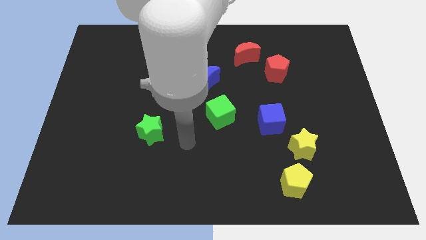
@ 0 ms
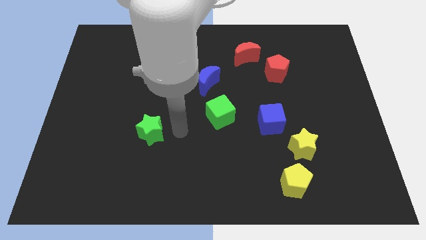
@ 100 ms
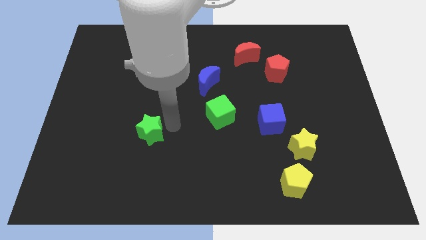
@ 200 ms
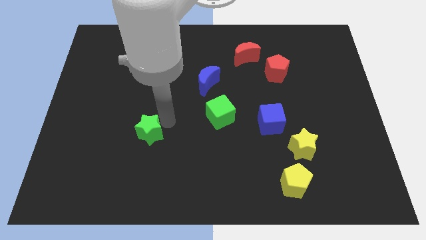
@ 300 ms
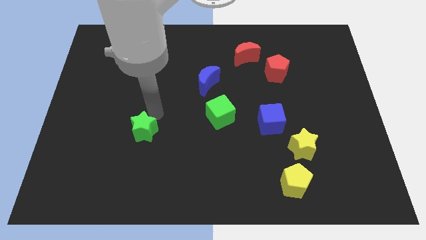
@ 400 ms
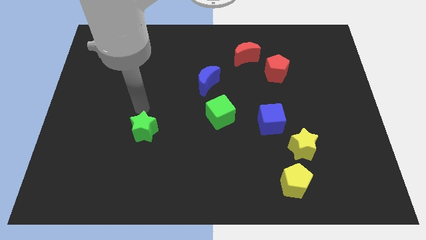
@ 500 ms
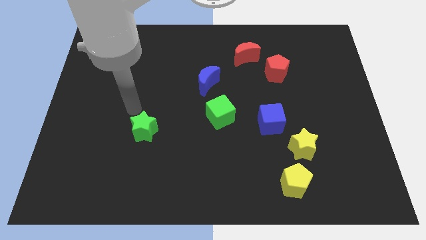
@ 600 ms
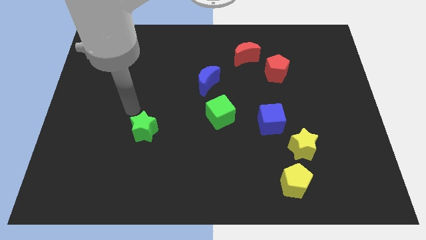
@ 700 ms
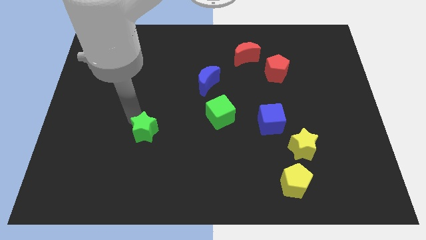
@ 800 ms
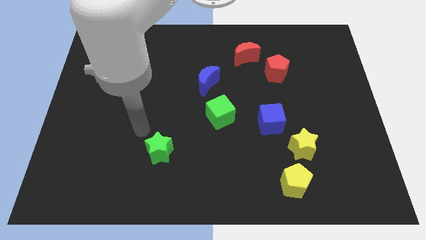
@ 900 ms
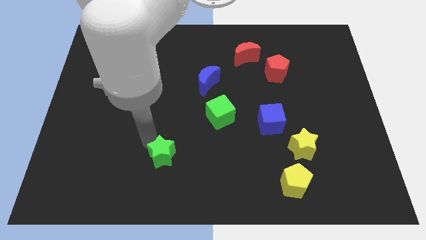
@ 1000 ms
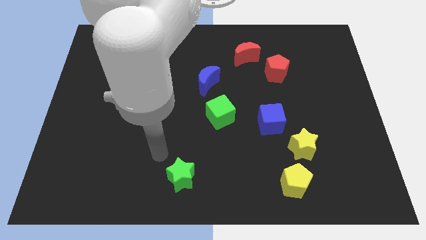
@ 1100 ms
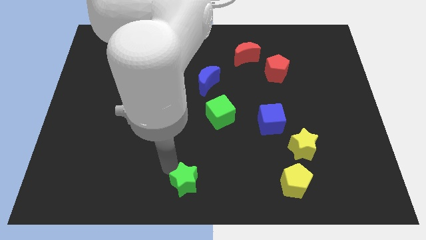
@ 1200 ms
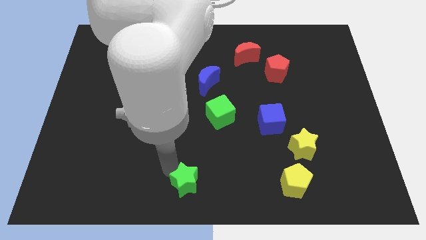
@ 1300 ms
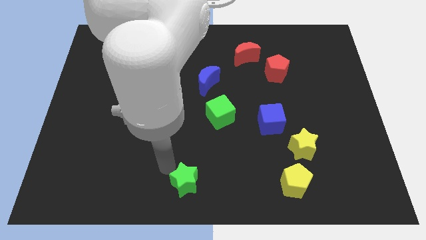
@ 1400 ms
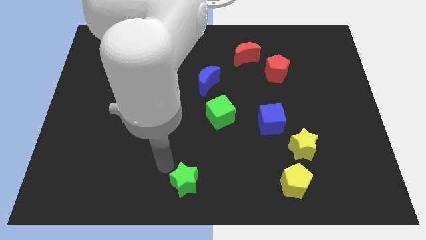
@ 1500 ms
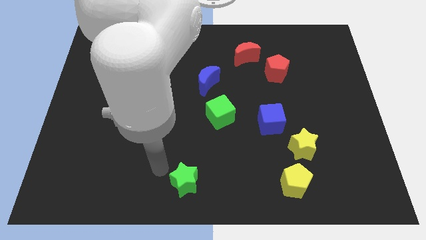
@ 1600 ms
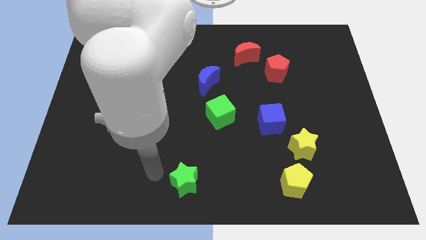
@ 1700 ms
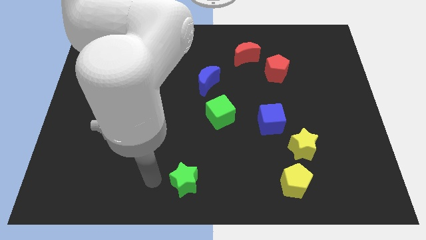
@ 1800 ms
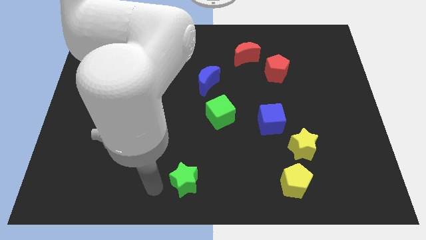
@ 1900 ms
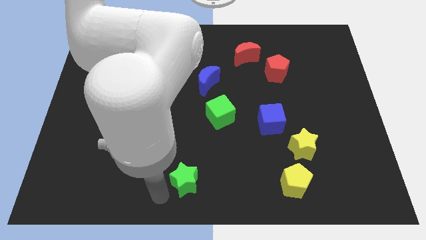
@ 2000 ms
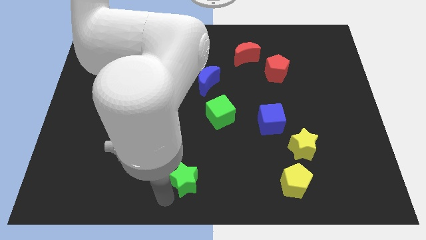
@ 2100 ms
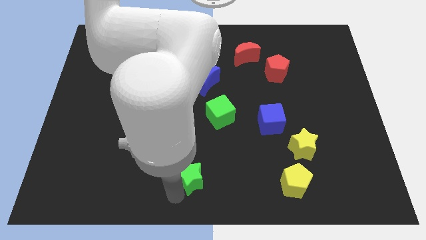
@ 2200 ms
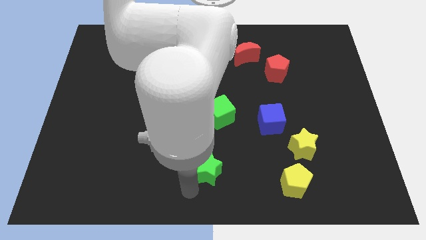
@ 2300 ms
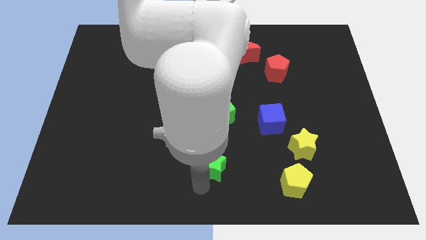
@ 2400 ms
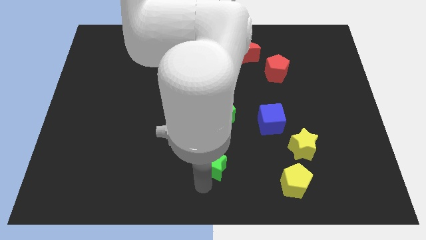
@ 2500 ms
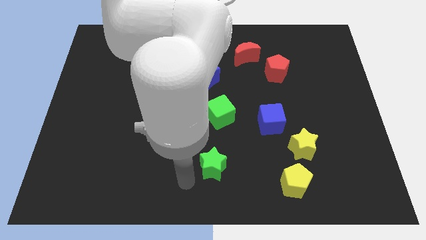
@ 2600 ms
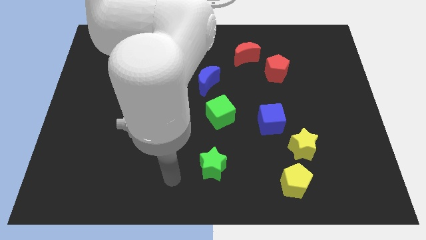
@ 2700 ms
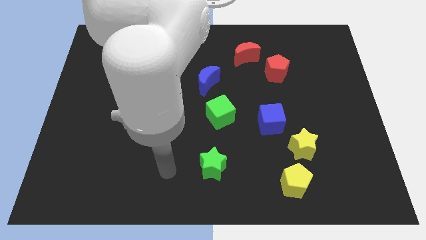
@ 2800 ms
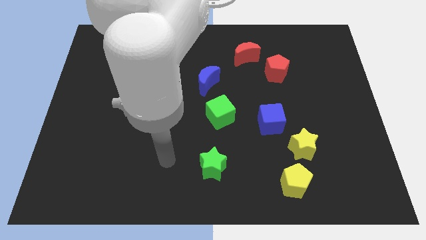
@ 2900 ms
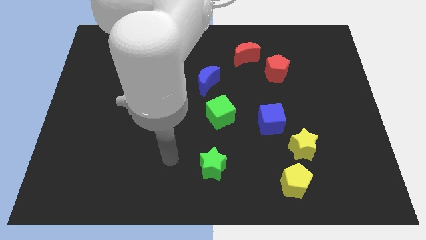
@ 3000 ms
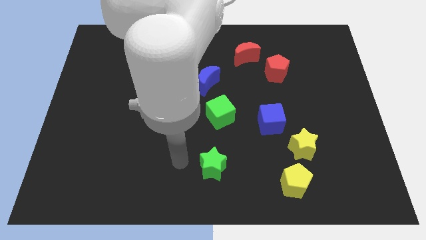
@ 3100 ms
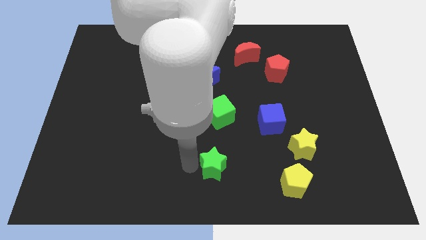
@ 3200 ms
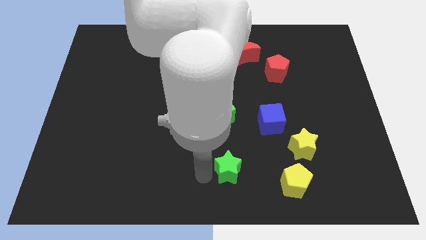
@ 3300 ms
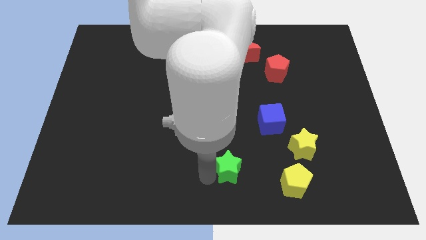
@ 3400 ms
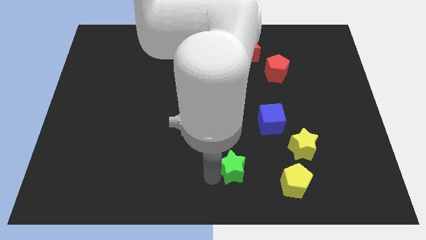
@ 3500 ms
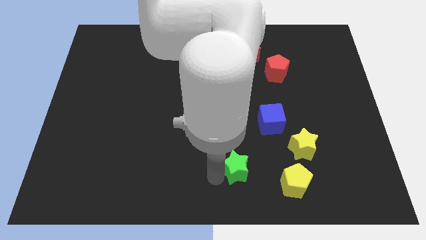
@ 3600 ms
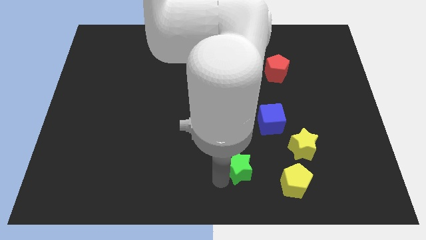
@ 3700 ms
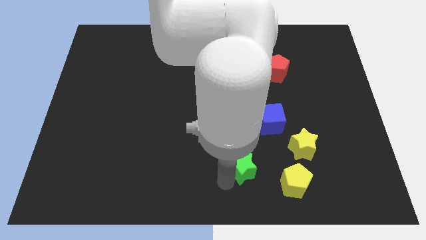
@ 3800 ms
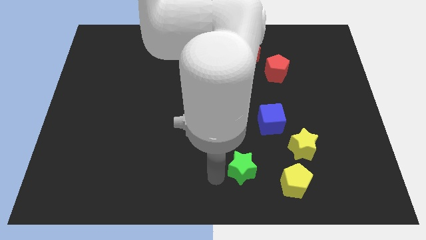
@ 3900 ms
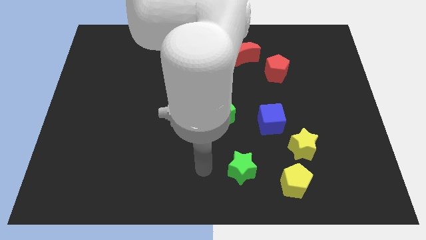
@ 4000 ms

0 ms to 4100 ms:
push green star to the top left of yellow pentagon

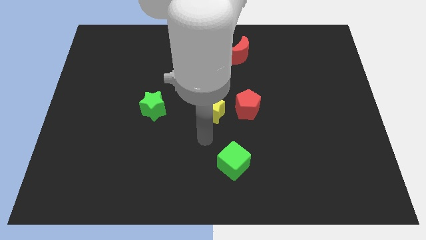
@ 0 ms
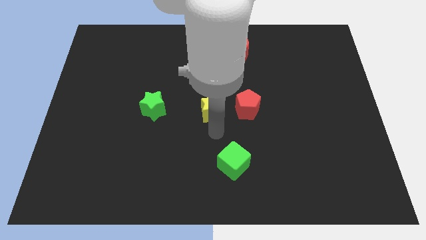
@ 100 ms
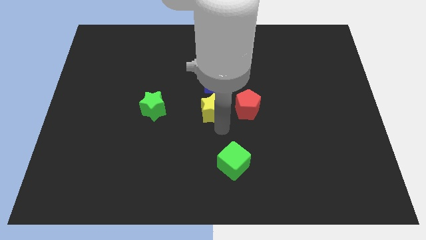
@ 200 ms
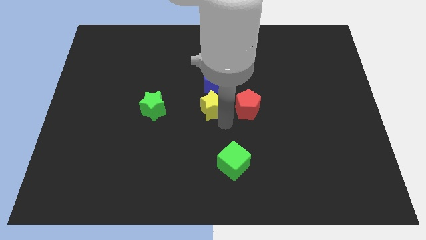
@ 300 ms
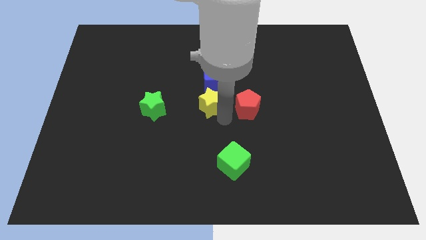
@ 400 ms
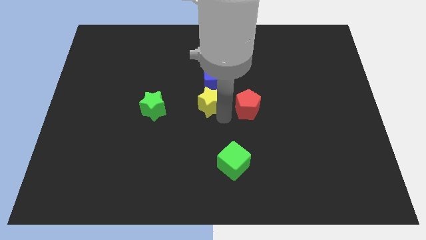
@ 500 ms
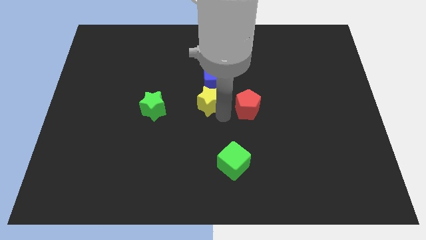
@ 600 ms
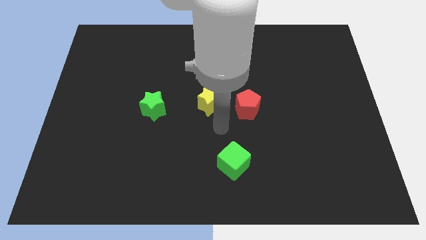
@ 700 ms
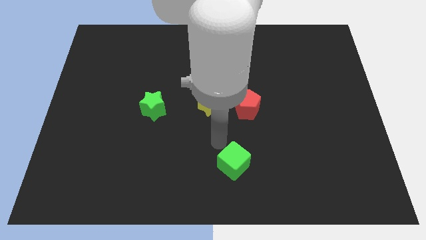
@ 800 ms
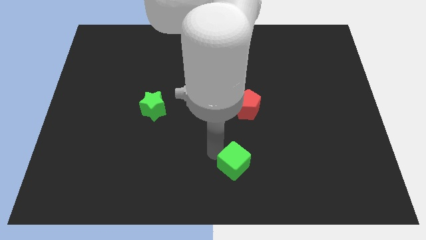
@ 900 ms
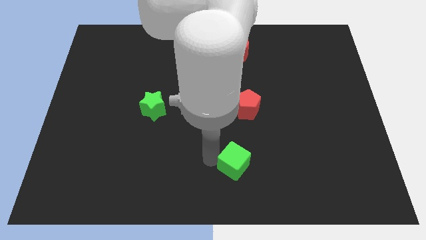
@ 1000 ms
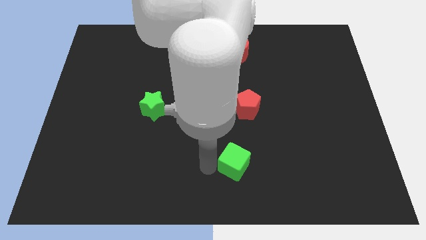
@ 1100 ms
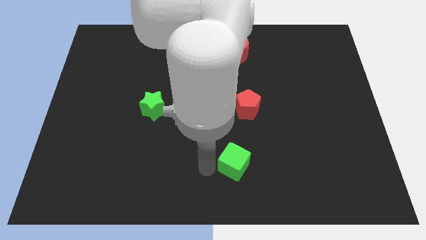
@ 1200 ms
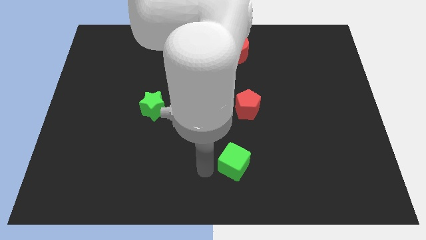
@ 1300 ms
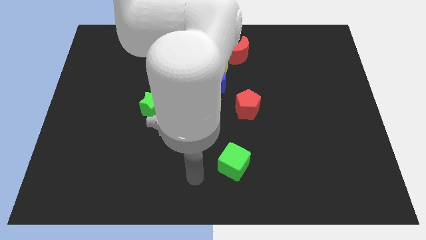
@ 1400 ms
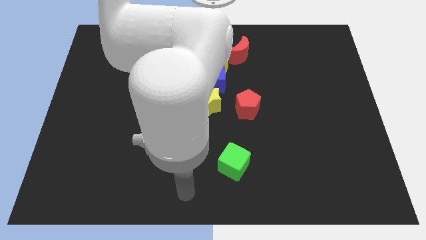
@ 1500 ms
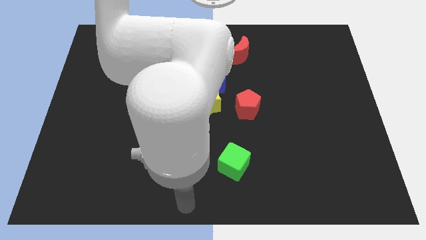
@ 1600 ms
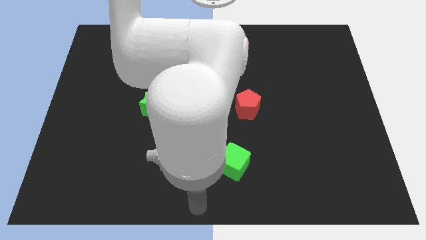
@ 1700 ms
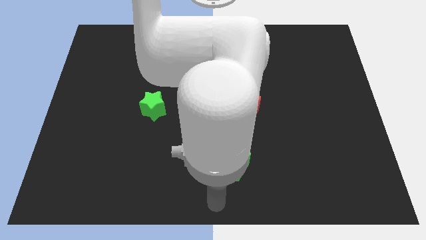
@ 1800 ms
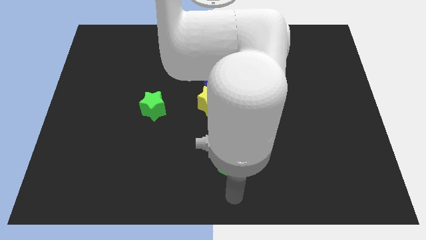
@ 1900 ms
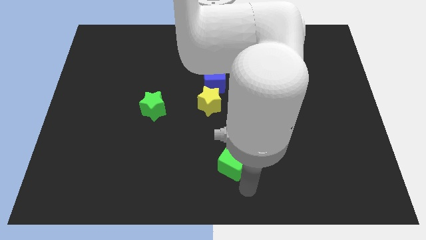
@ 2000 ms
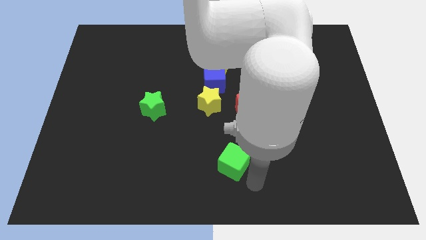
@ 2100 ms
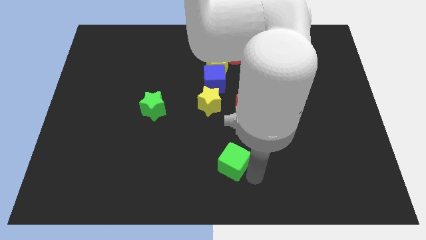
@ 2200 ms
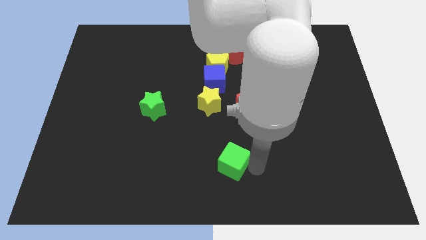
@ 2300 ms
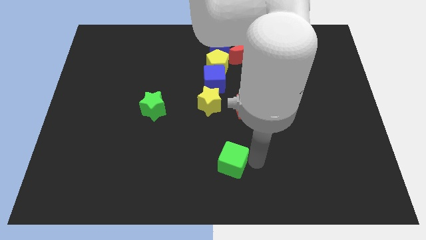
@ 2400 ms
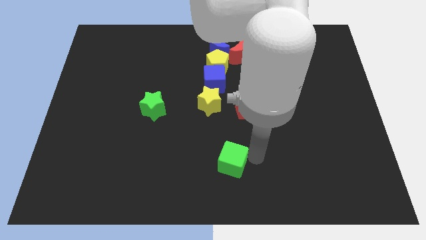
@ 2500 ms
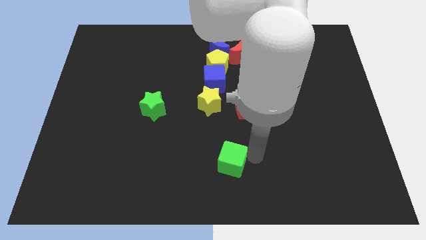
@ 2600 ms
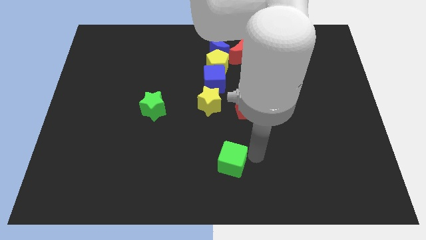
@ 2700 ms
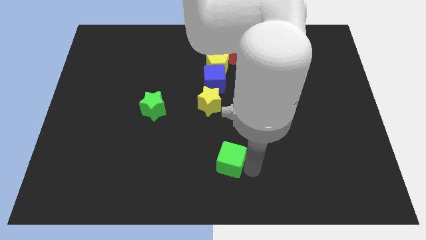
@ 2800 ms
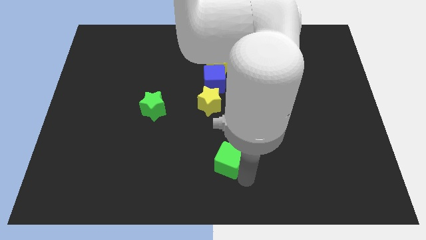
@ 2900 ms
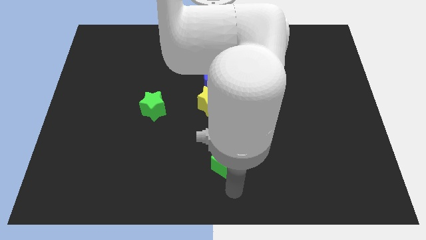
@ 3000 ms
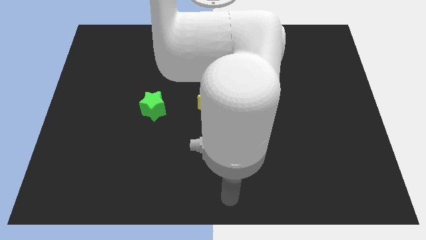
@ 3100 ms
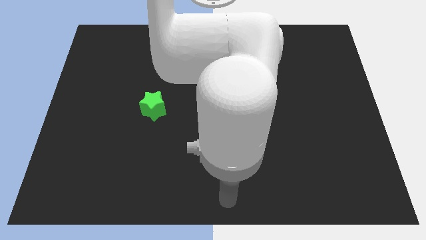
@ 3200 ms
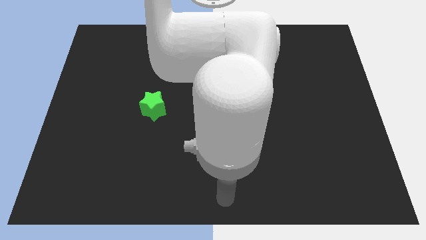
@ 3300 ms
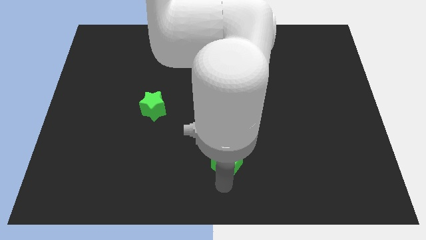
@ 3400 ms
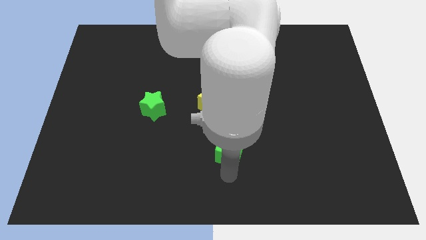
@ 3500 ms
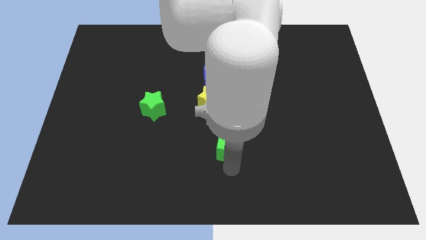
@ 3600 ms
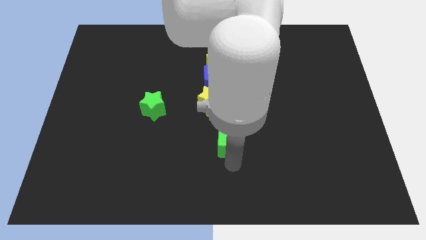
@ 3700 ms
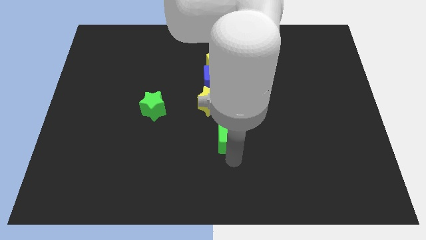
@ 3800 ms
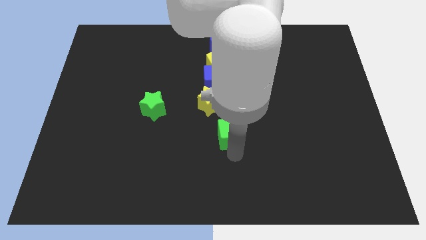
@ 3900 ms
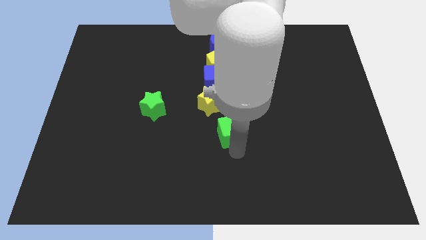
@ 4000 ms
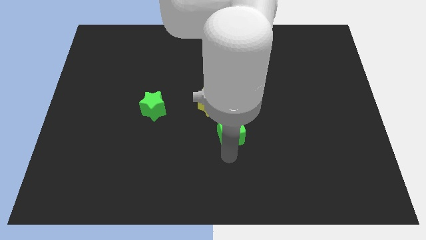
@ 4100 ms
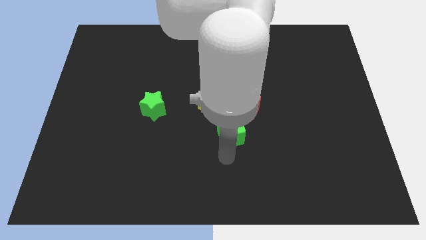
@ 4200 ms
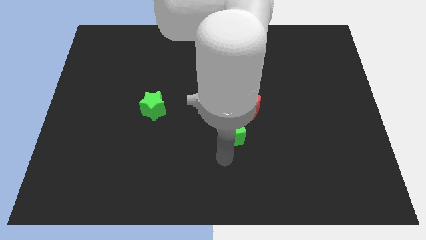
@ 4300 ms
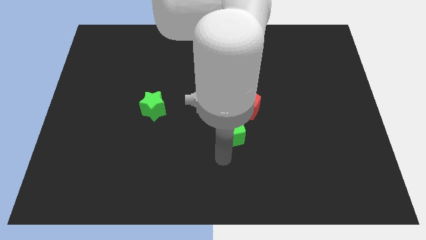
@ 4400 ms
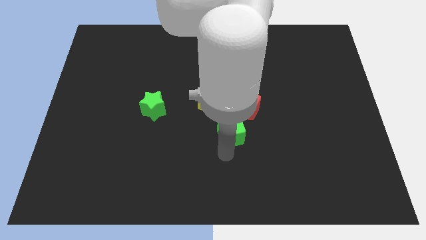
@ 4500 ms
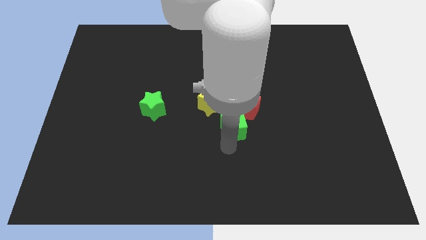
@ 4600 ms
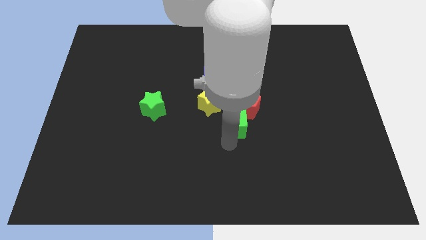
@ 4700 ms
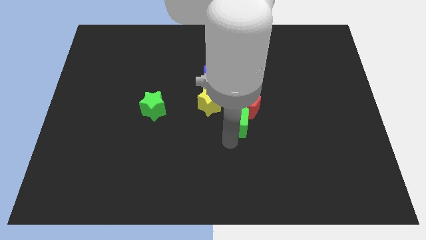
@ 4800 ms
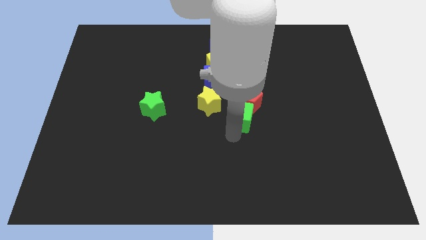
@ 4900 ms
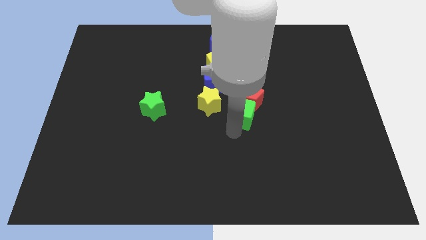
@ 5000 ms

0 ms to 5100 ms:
slide the green cube into the red pentagon
